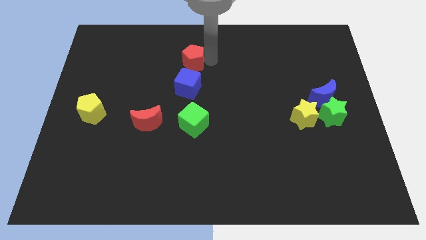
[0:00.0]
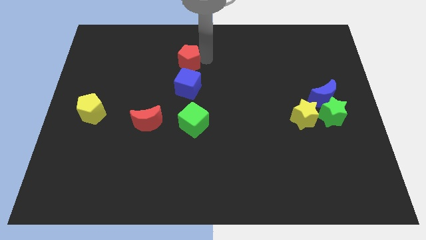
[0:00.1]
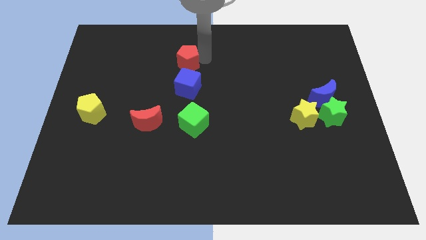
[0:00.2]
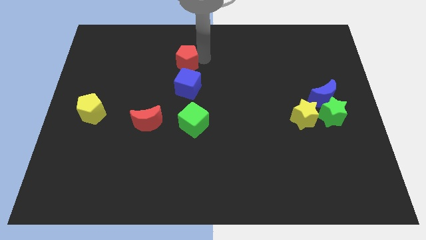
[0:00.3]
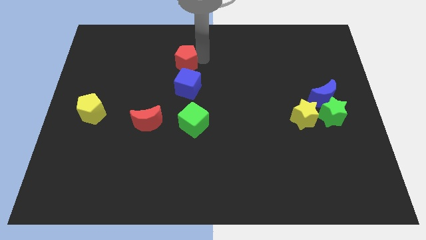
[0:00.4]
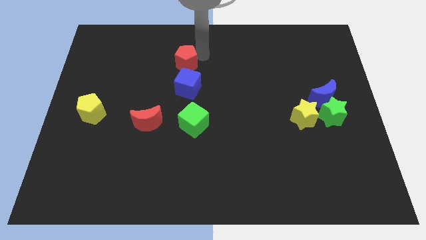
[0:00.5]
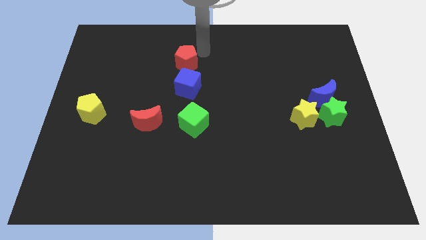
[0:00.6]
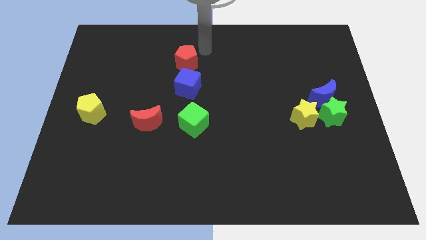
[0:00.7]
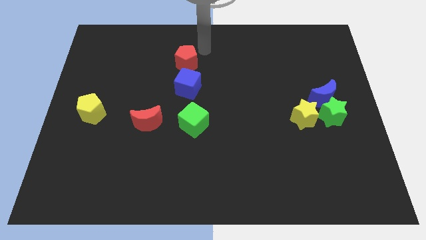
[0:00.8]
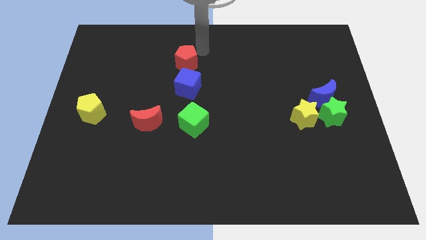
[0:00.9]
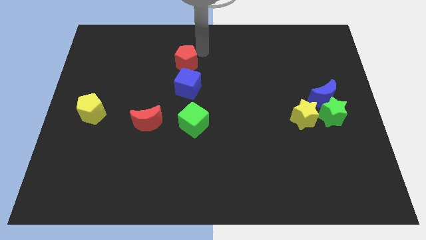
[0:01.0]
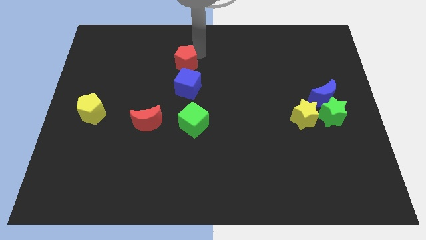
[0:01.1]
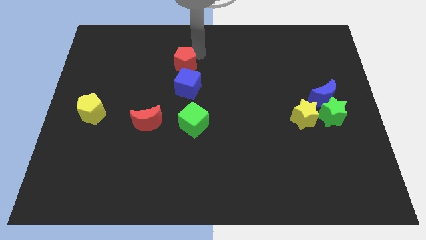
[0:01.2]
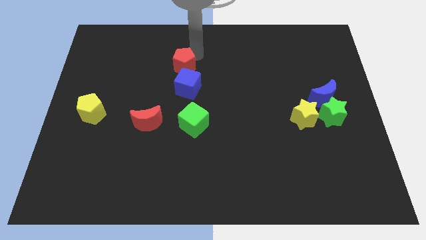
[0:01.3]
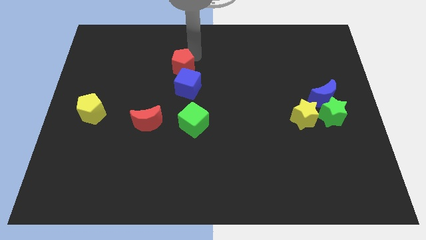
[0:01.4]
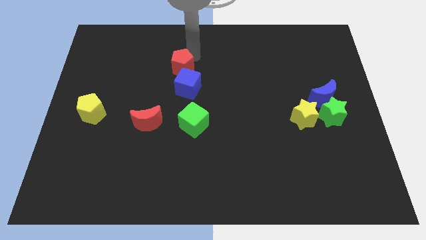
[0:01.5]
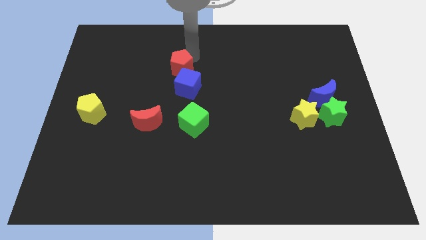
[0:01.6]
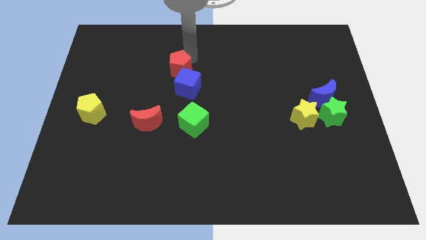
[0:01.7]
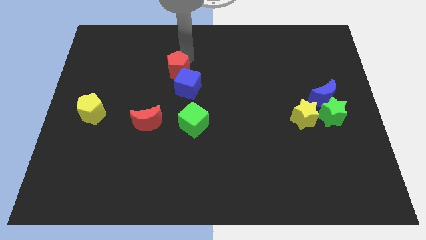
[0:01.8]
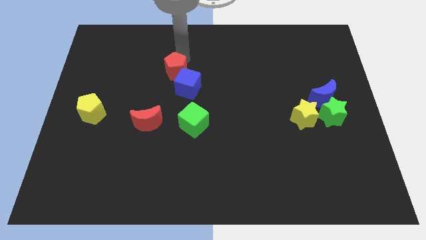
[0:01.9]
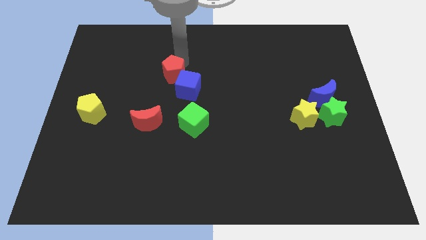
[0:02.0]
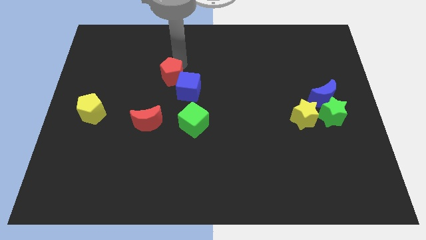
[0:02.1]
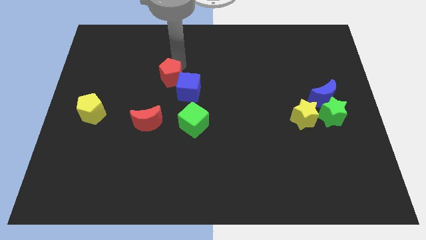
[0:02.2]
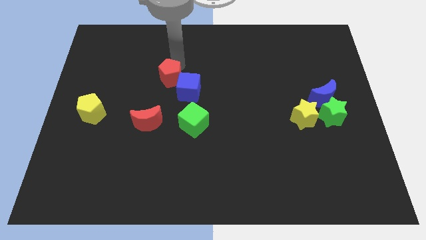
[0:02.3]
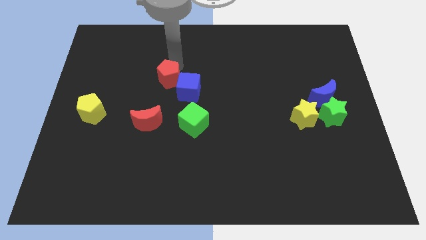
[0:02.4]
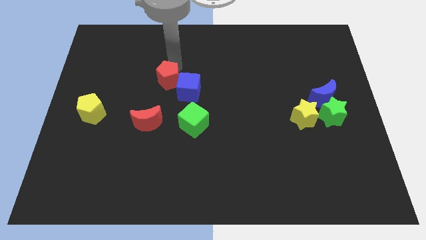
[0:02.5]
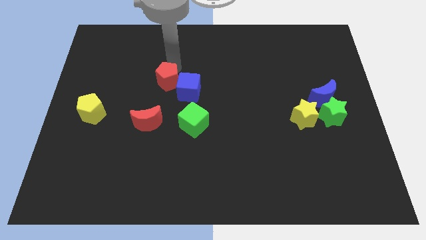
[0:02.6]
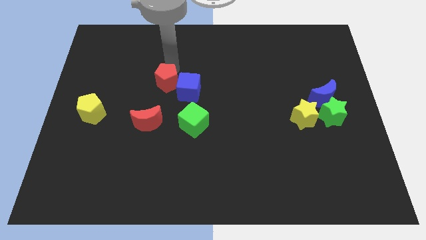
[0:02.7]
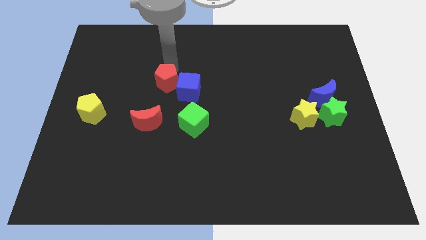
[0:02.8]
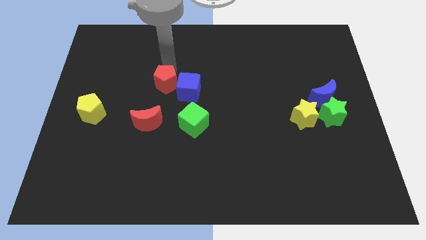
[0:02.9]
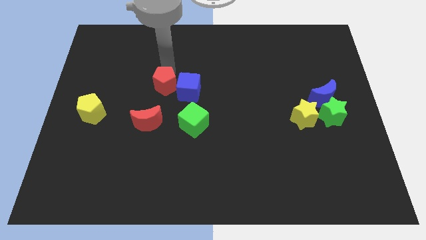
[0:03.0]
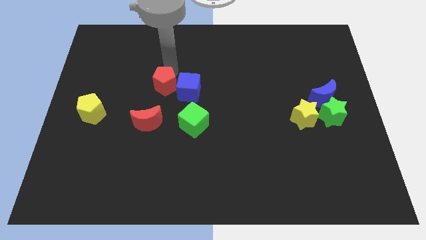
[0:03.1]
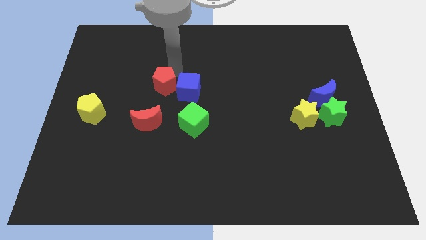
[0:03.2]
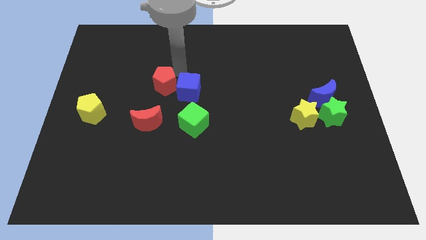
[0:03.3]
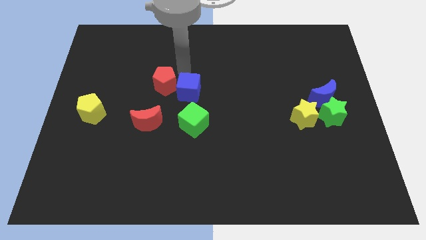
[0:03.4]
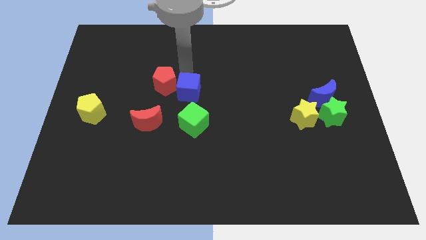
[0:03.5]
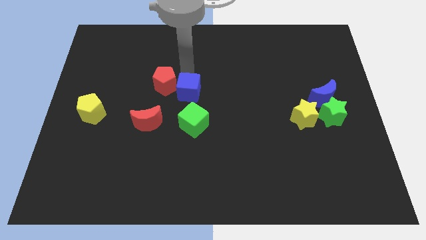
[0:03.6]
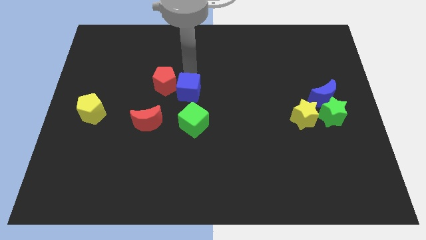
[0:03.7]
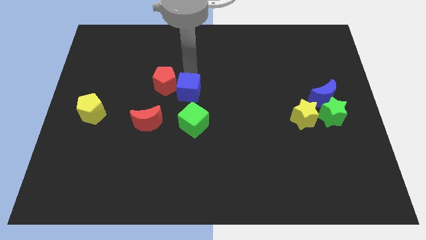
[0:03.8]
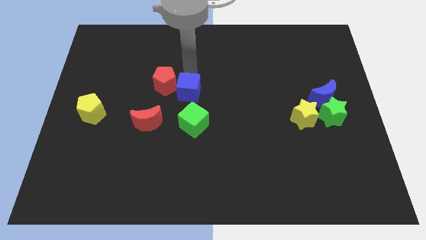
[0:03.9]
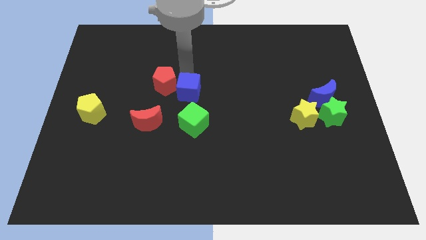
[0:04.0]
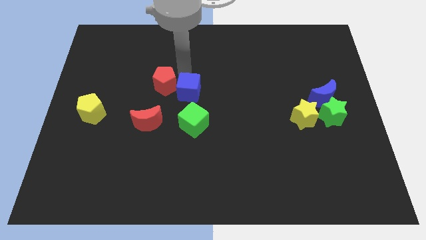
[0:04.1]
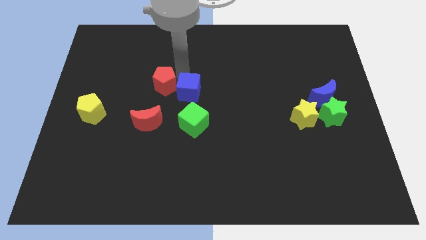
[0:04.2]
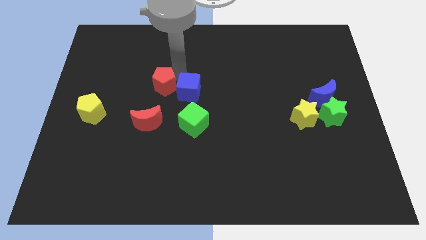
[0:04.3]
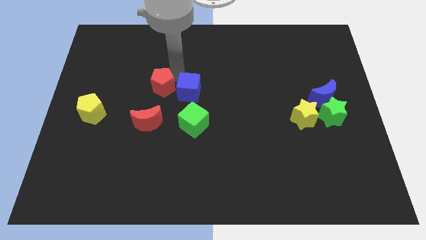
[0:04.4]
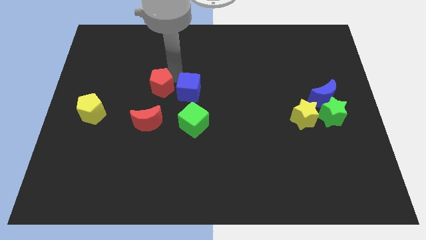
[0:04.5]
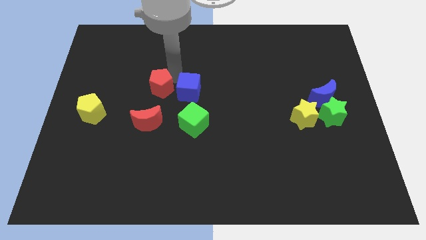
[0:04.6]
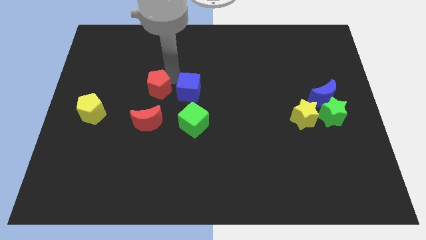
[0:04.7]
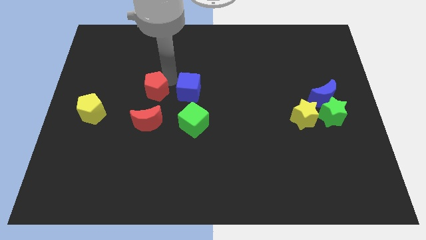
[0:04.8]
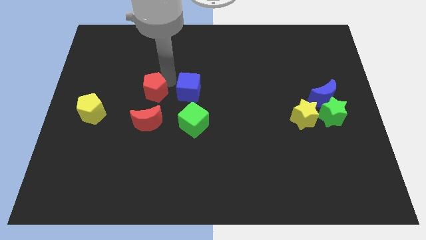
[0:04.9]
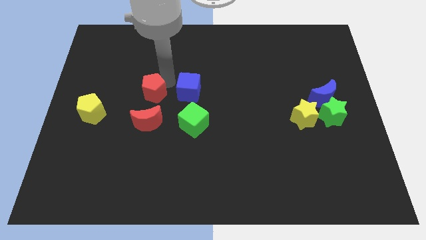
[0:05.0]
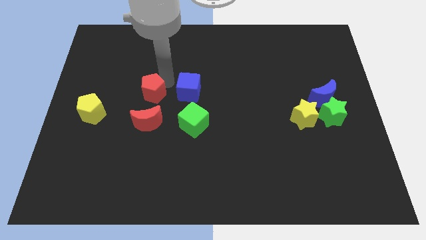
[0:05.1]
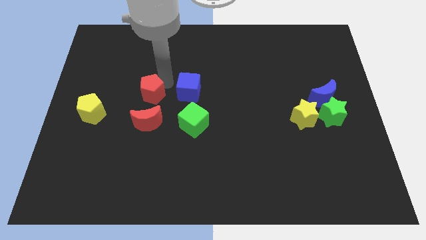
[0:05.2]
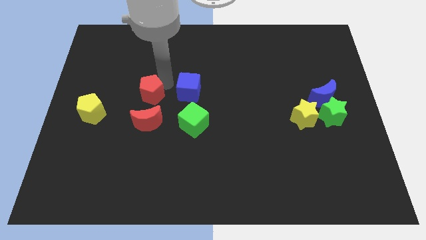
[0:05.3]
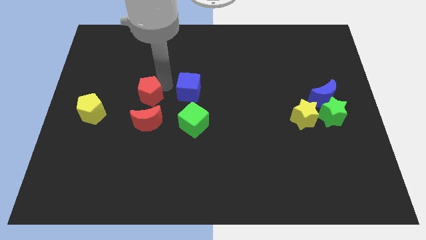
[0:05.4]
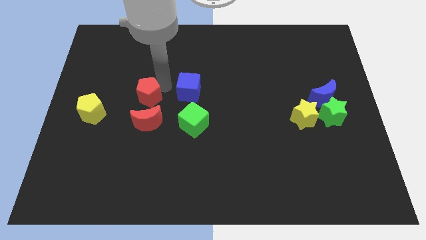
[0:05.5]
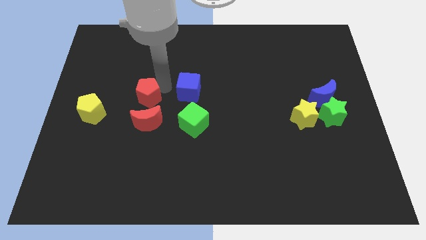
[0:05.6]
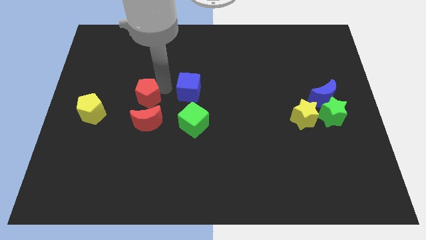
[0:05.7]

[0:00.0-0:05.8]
drag the red pentagon towards the top side of the red crescent

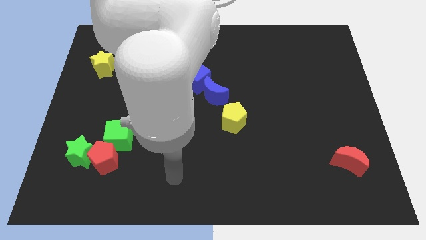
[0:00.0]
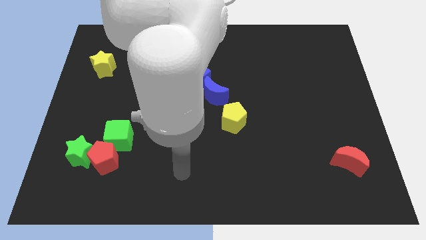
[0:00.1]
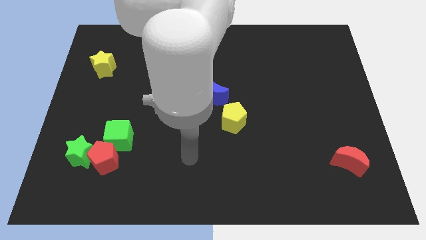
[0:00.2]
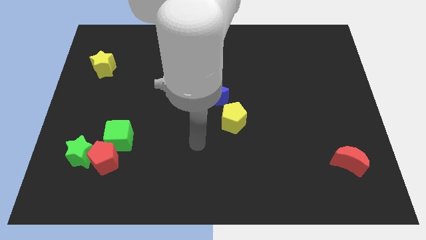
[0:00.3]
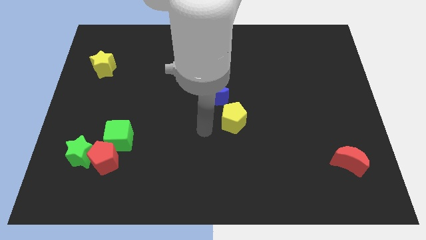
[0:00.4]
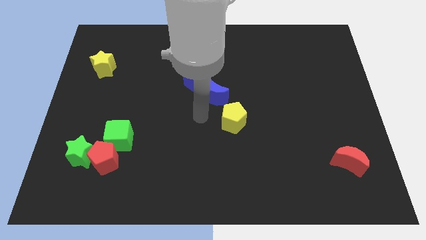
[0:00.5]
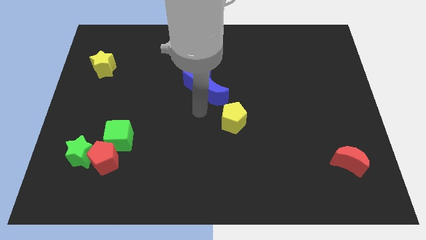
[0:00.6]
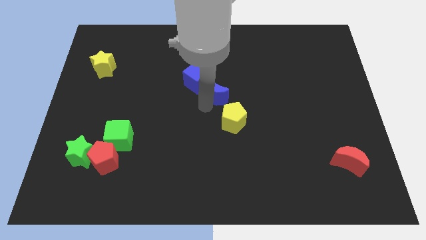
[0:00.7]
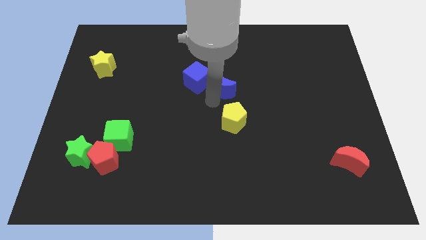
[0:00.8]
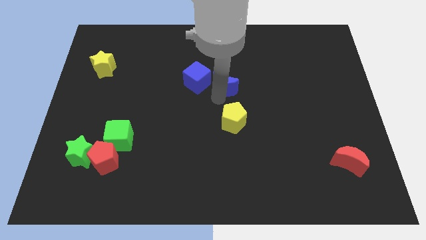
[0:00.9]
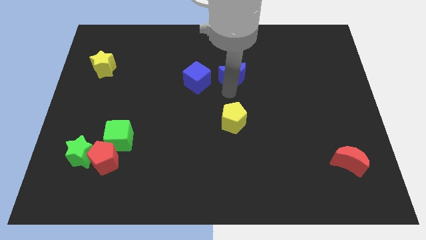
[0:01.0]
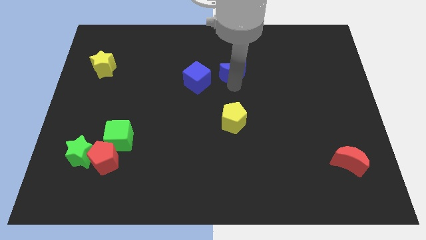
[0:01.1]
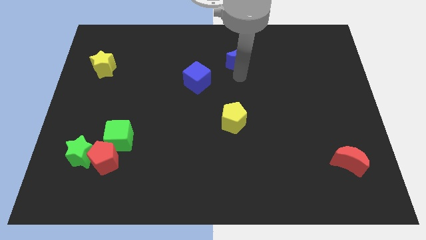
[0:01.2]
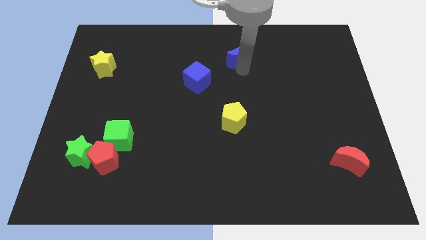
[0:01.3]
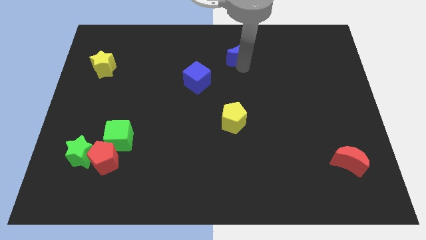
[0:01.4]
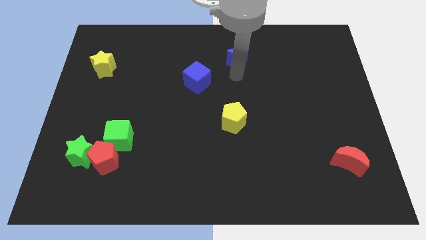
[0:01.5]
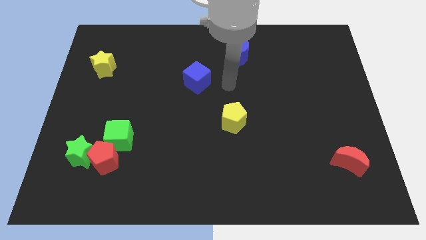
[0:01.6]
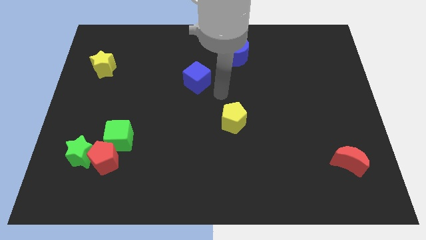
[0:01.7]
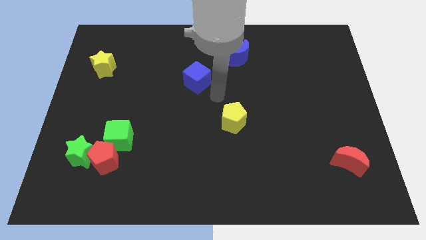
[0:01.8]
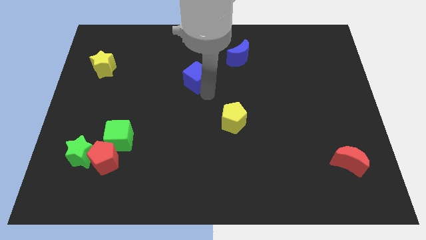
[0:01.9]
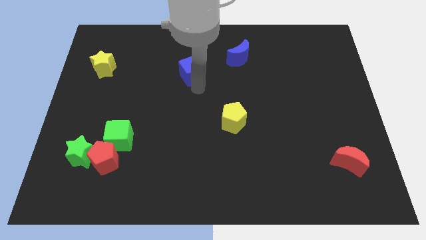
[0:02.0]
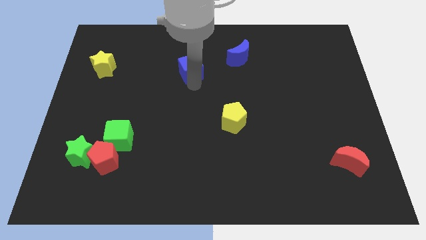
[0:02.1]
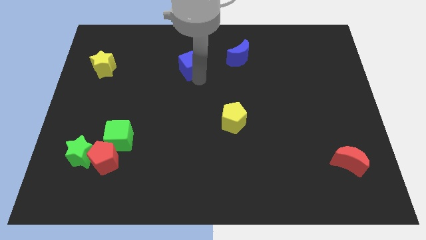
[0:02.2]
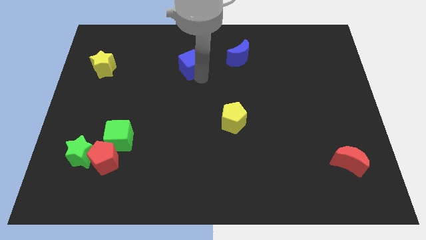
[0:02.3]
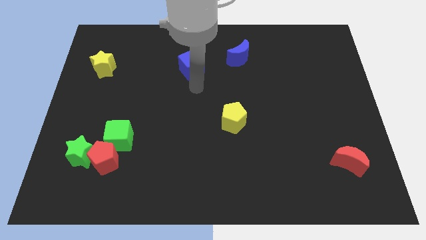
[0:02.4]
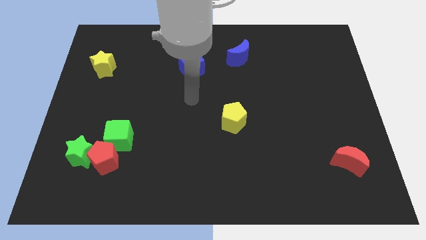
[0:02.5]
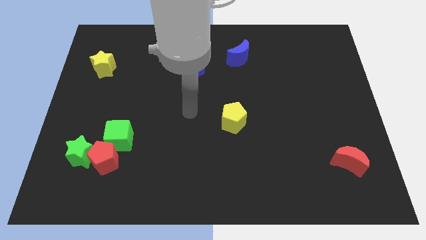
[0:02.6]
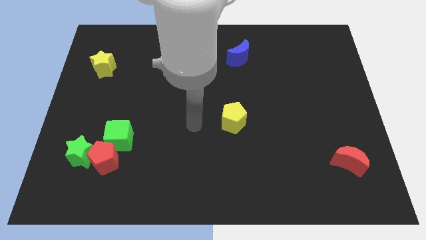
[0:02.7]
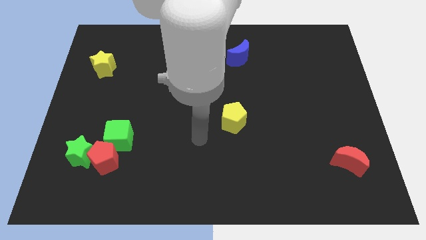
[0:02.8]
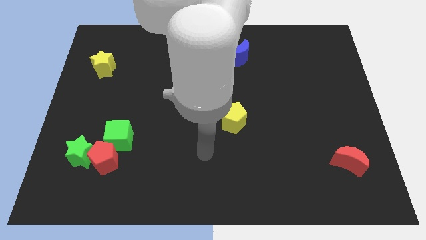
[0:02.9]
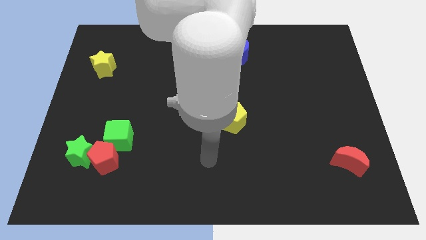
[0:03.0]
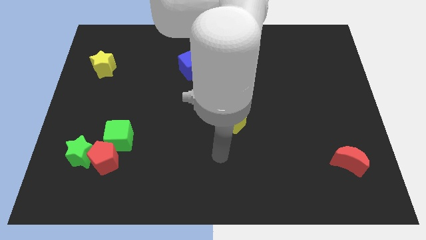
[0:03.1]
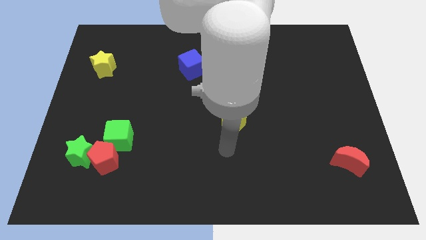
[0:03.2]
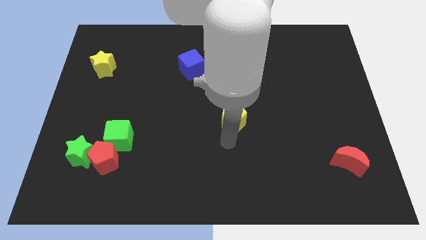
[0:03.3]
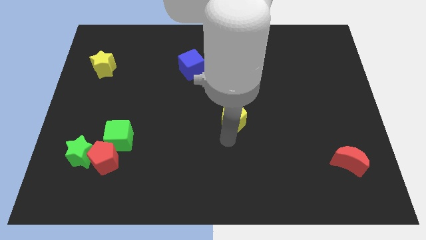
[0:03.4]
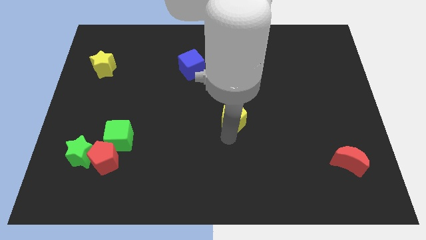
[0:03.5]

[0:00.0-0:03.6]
move the blue cube and blue moon to the top center
